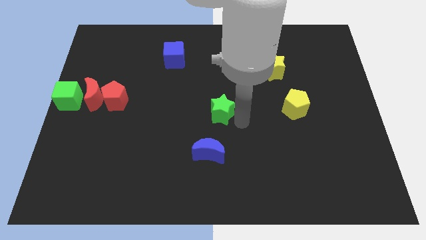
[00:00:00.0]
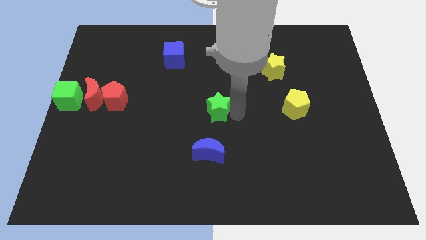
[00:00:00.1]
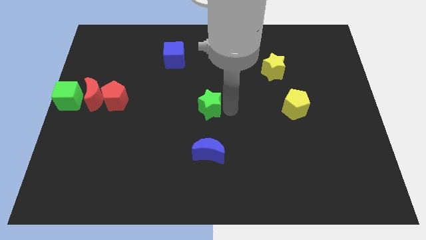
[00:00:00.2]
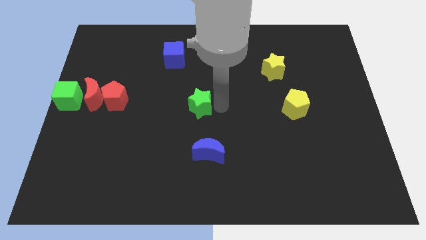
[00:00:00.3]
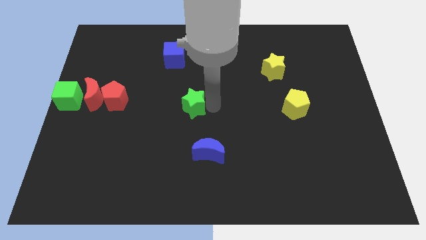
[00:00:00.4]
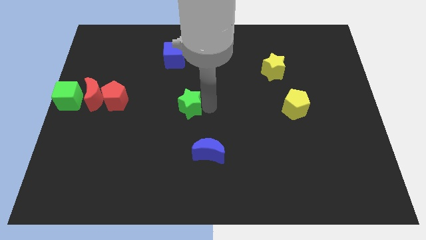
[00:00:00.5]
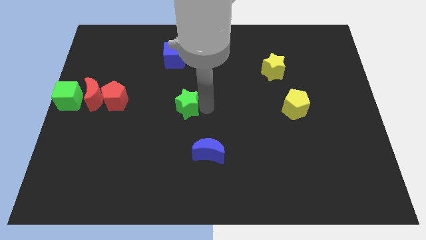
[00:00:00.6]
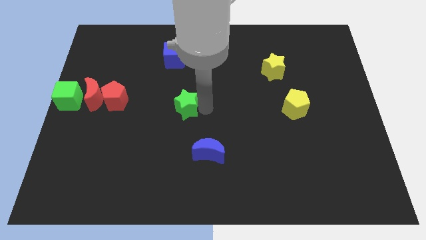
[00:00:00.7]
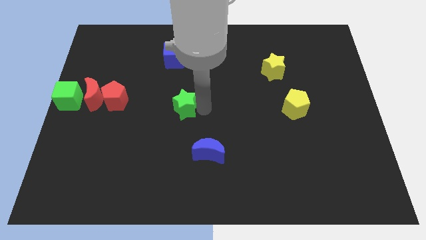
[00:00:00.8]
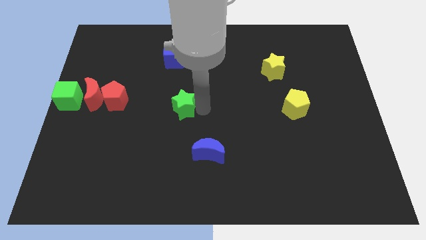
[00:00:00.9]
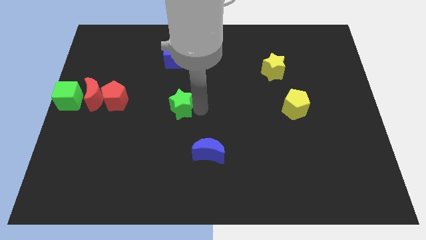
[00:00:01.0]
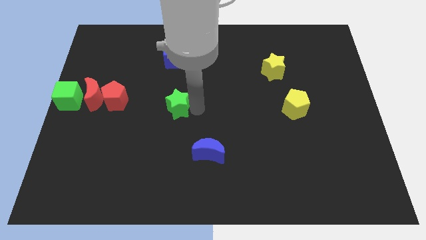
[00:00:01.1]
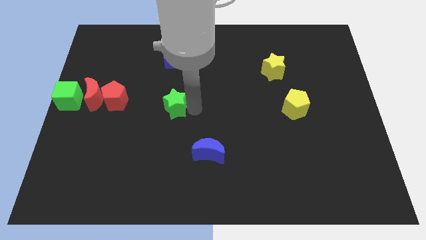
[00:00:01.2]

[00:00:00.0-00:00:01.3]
push the green star towards the center left side of the board

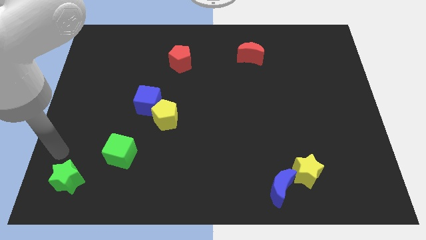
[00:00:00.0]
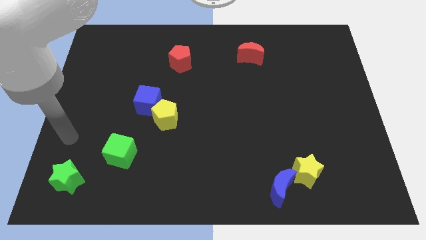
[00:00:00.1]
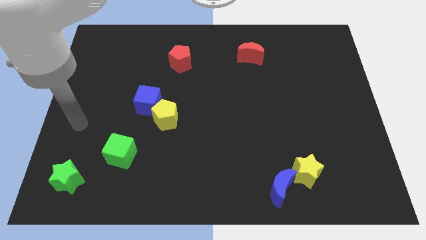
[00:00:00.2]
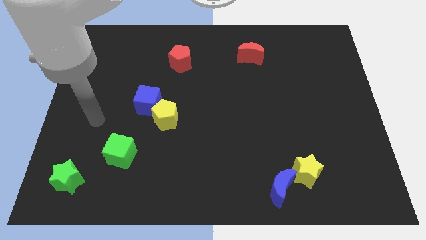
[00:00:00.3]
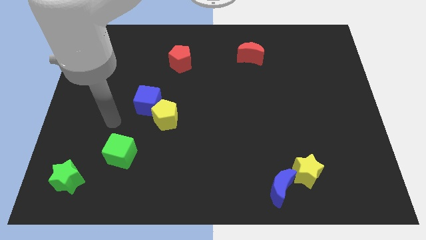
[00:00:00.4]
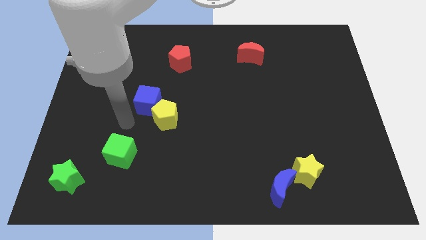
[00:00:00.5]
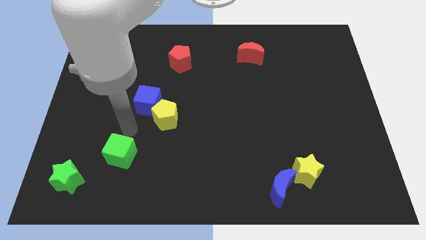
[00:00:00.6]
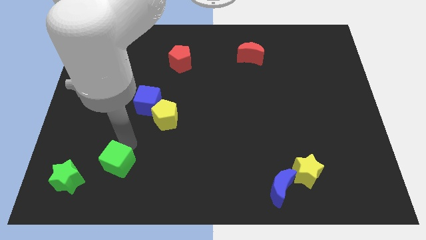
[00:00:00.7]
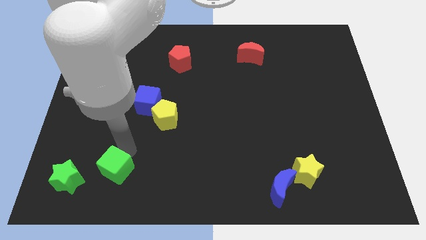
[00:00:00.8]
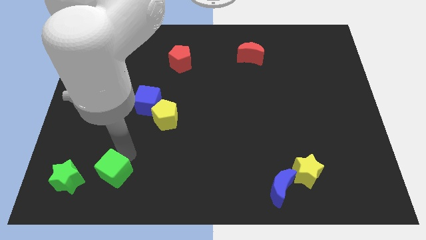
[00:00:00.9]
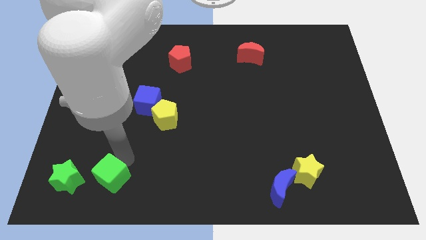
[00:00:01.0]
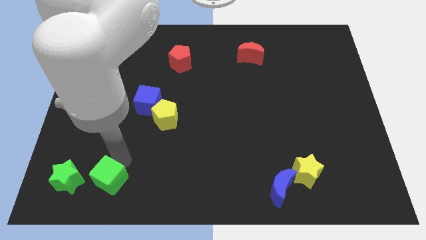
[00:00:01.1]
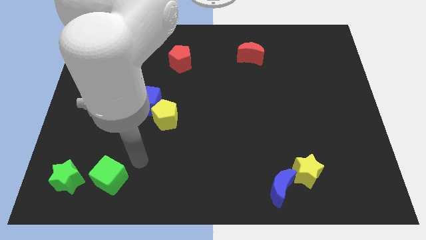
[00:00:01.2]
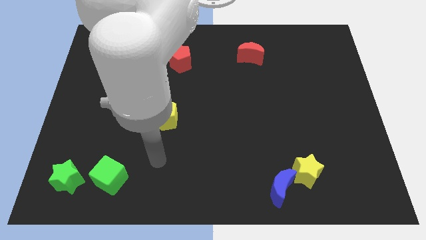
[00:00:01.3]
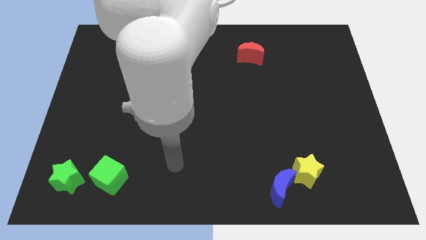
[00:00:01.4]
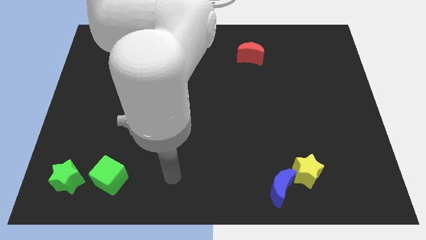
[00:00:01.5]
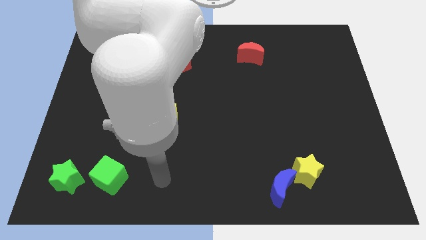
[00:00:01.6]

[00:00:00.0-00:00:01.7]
place the green cube to the right side of the green star

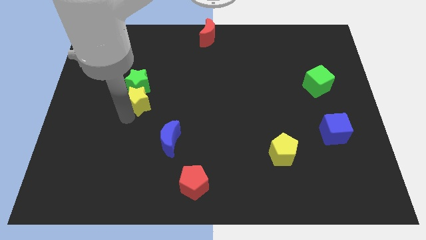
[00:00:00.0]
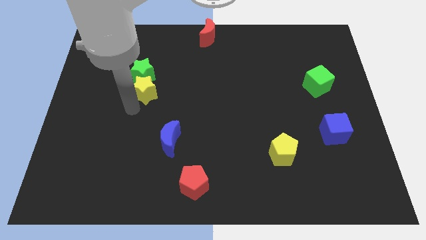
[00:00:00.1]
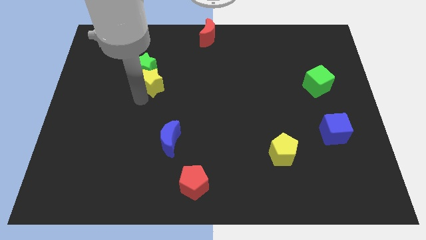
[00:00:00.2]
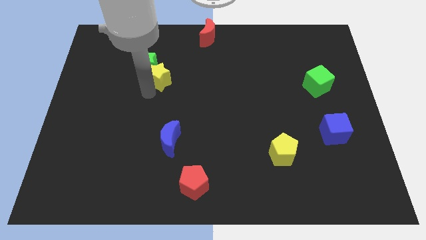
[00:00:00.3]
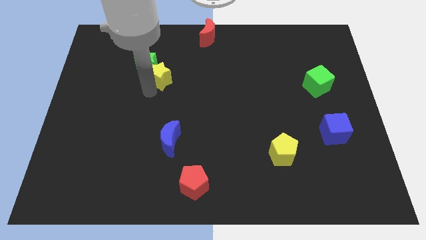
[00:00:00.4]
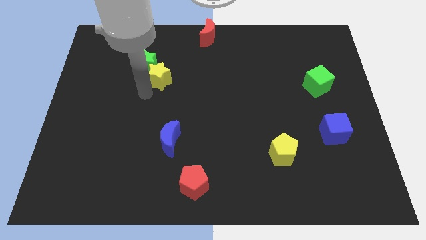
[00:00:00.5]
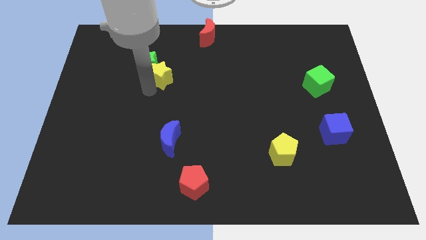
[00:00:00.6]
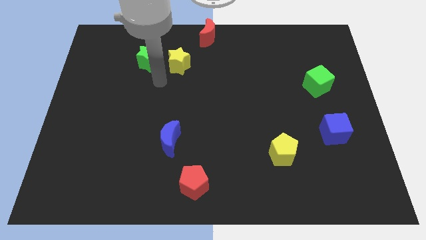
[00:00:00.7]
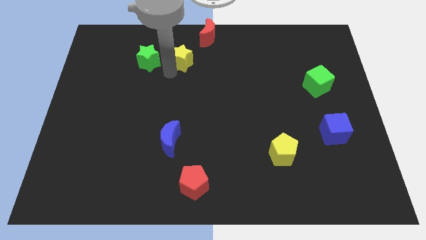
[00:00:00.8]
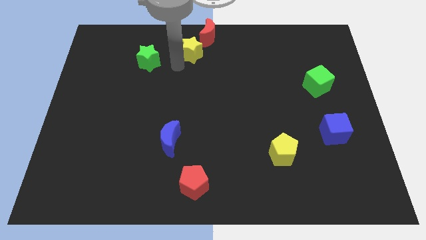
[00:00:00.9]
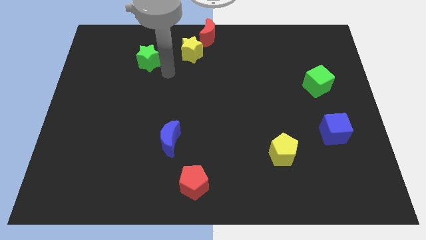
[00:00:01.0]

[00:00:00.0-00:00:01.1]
push the yellow star close to the red crescent

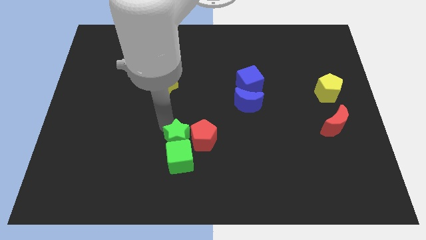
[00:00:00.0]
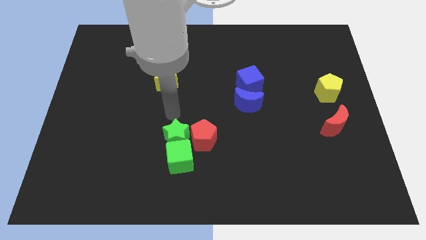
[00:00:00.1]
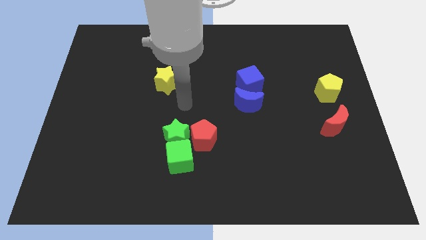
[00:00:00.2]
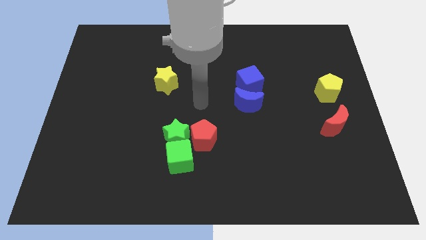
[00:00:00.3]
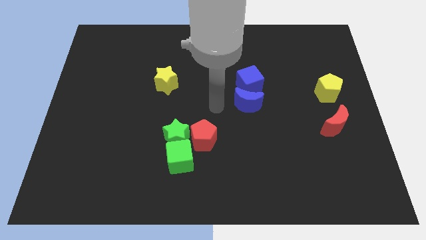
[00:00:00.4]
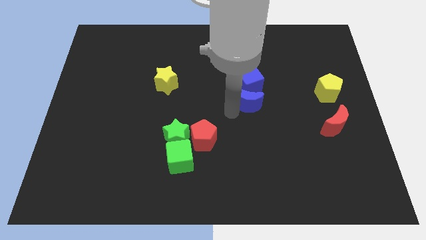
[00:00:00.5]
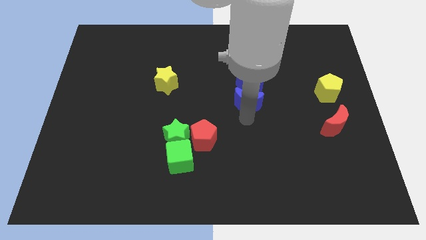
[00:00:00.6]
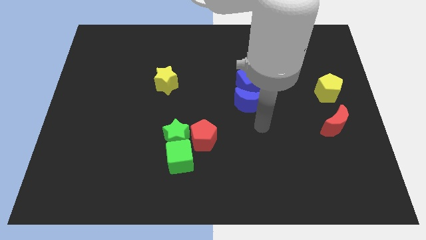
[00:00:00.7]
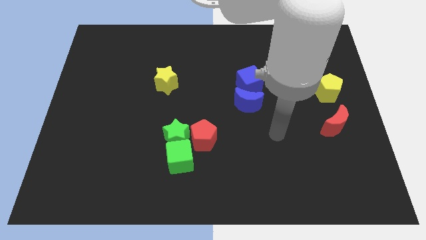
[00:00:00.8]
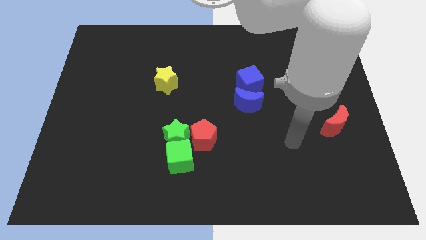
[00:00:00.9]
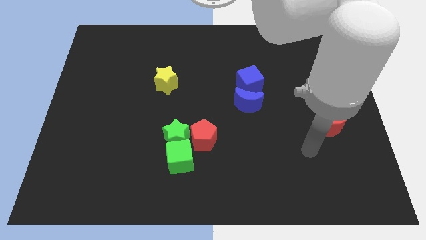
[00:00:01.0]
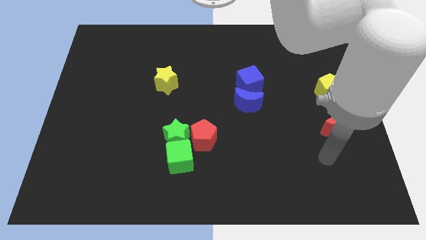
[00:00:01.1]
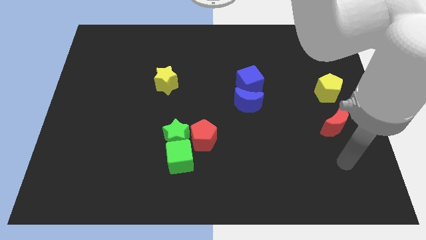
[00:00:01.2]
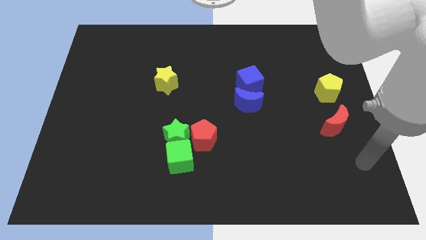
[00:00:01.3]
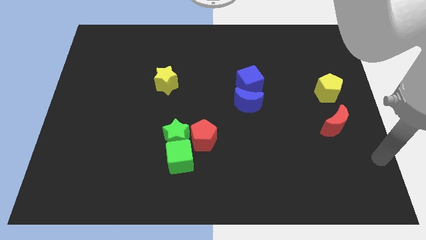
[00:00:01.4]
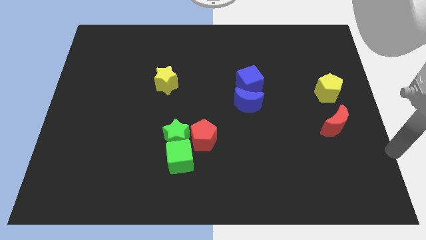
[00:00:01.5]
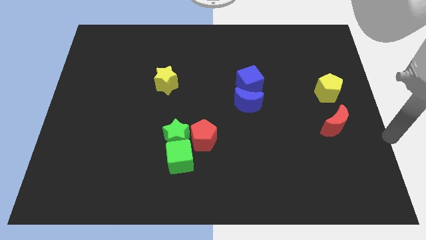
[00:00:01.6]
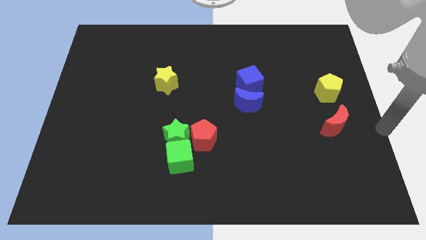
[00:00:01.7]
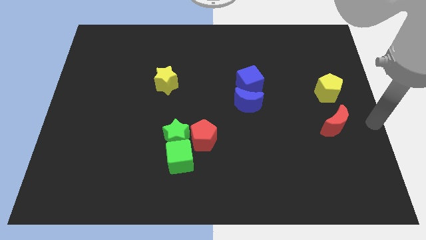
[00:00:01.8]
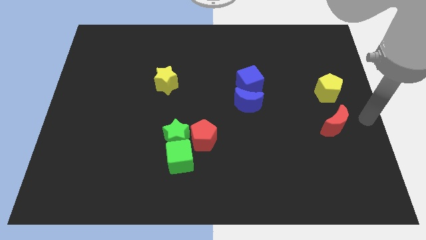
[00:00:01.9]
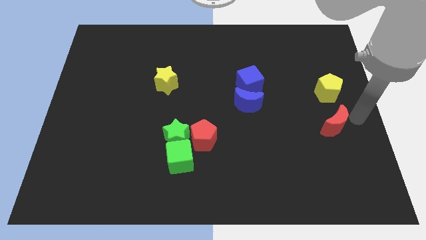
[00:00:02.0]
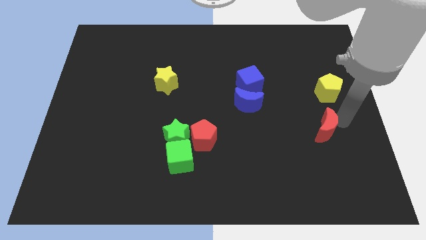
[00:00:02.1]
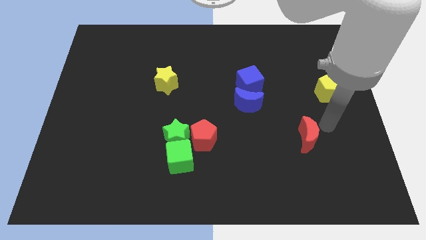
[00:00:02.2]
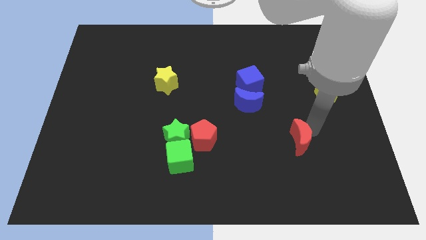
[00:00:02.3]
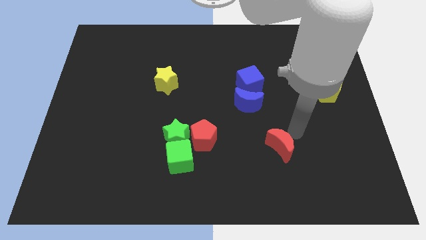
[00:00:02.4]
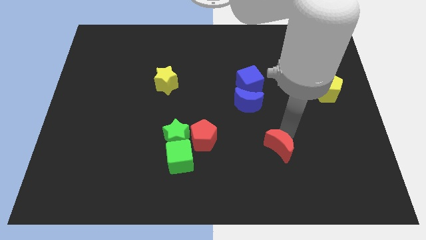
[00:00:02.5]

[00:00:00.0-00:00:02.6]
move red moon towards red pentagon

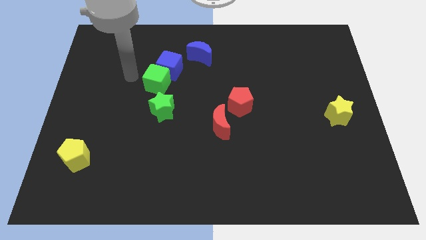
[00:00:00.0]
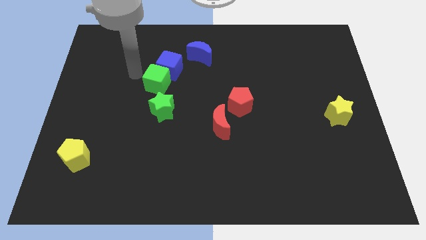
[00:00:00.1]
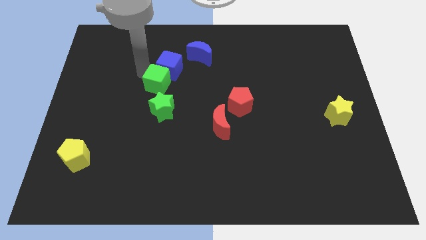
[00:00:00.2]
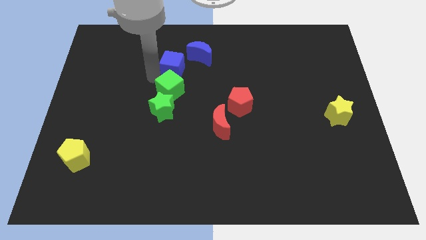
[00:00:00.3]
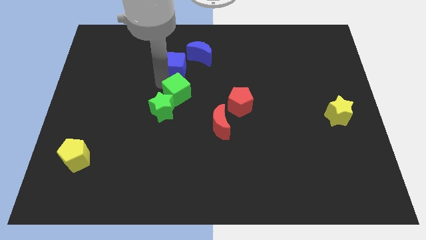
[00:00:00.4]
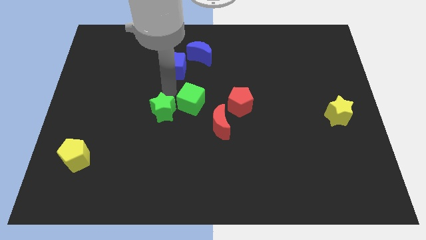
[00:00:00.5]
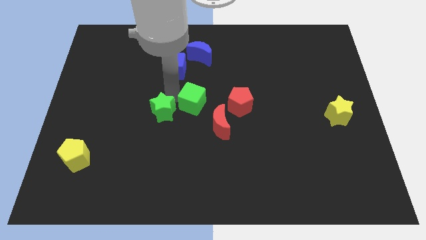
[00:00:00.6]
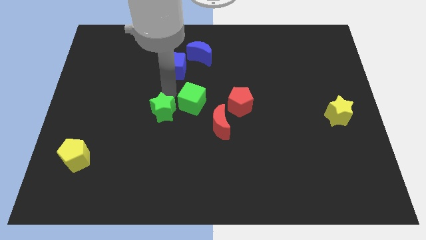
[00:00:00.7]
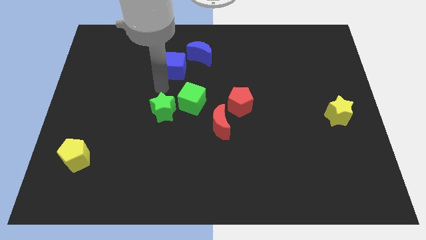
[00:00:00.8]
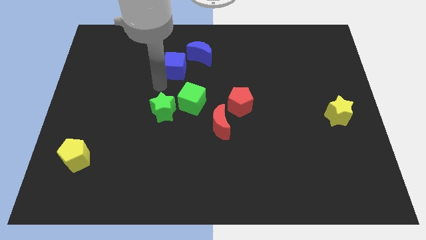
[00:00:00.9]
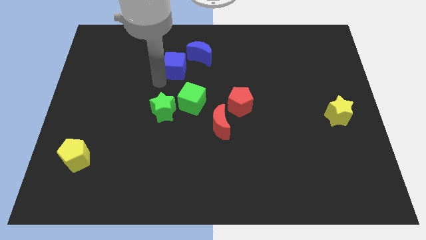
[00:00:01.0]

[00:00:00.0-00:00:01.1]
slide green cube towards red pentagon

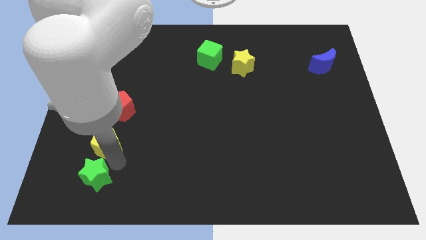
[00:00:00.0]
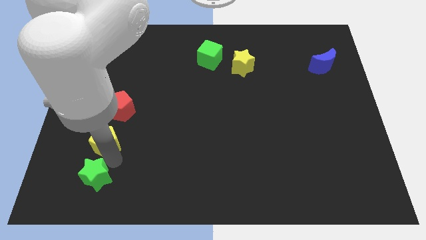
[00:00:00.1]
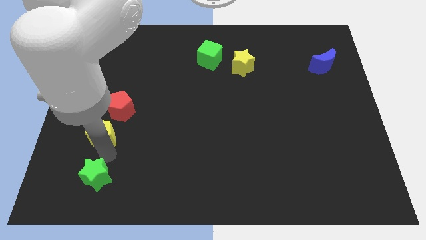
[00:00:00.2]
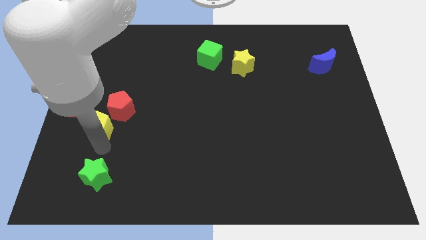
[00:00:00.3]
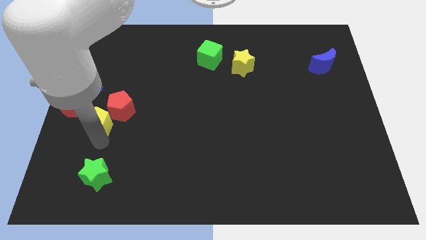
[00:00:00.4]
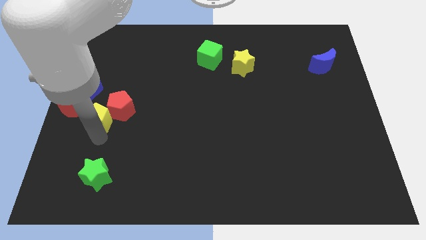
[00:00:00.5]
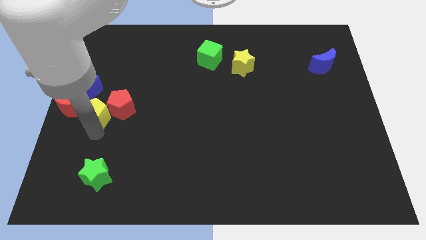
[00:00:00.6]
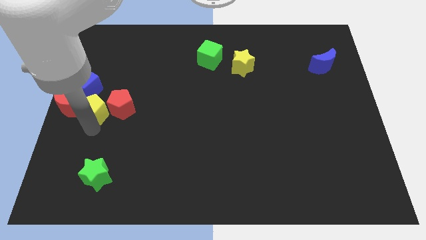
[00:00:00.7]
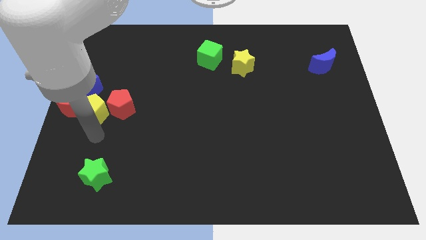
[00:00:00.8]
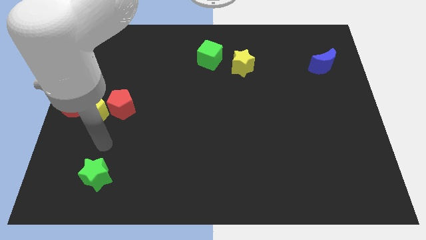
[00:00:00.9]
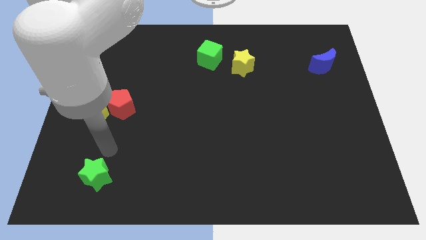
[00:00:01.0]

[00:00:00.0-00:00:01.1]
move the yellow pentagon to the left side of the red pentagon
